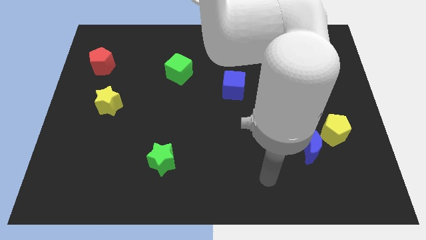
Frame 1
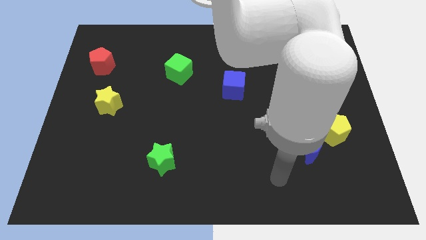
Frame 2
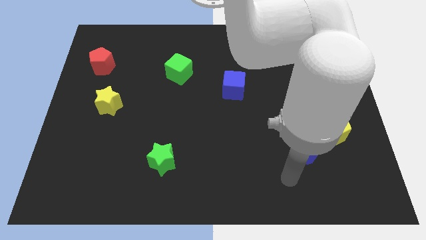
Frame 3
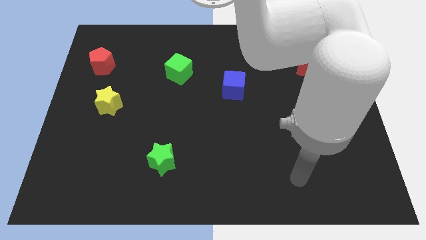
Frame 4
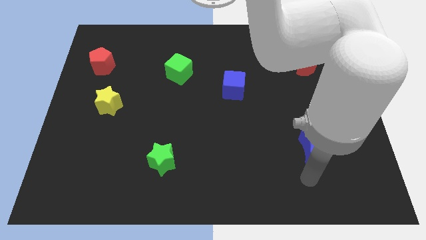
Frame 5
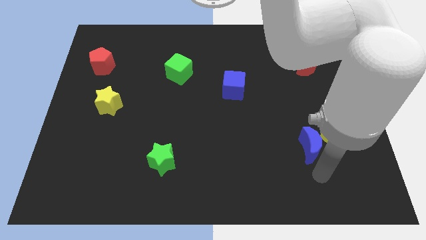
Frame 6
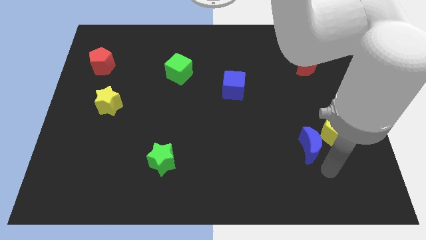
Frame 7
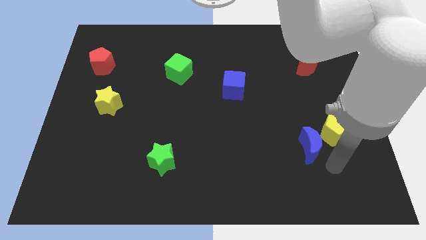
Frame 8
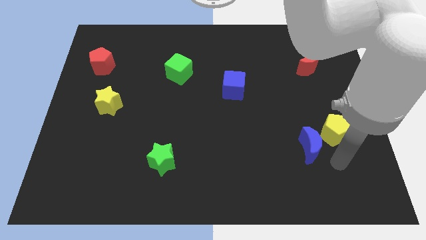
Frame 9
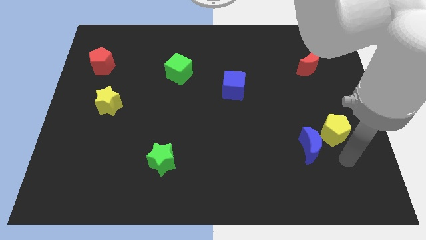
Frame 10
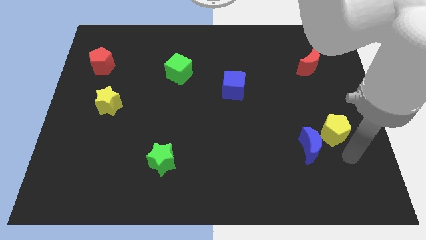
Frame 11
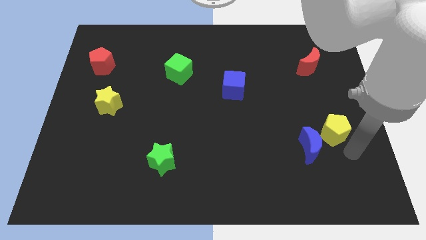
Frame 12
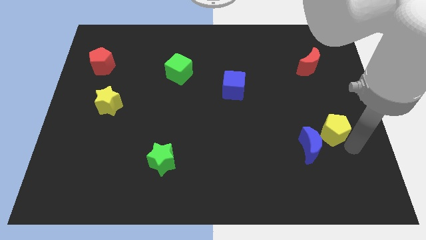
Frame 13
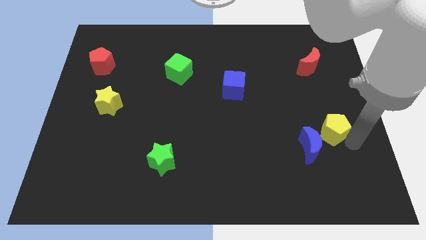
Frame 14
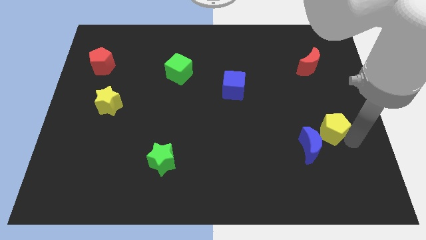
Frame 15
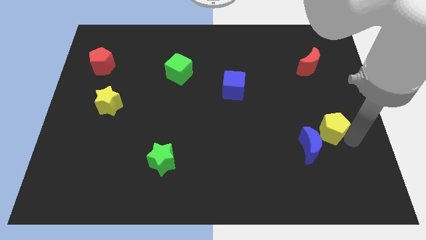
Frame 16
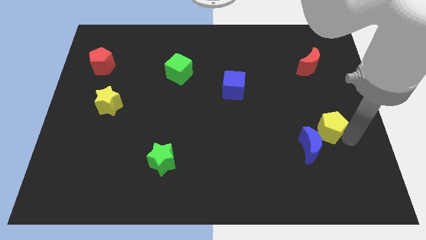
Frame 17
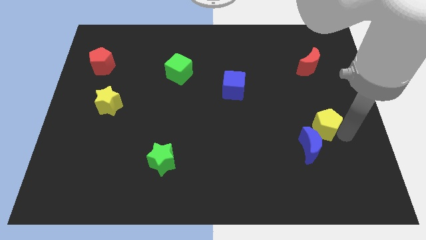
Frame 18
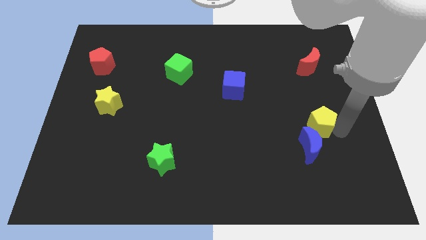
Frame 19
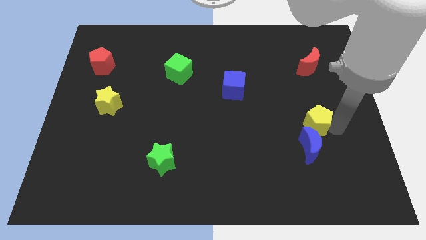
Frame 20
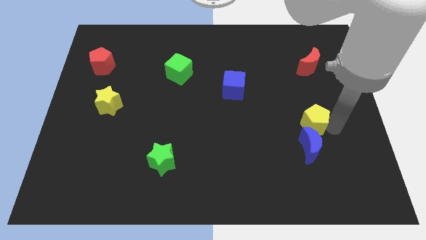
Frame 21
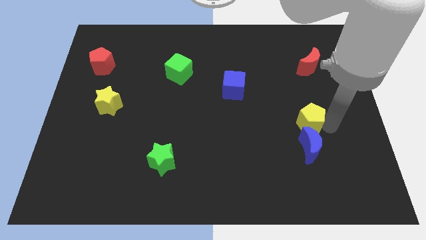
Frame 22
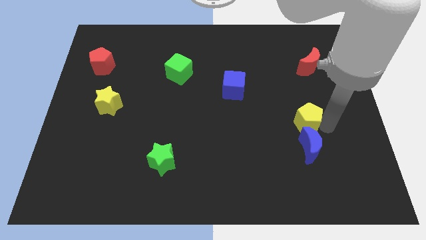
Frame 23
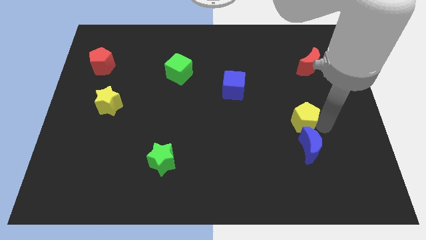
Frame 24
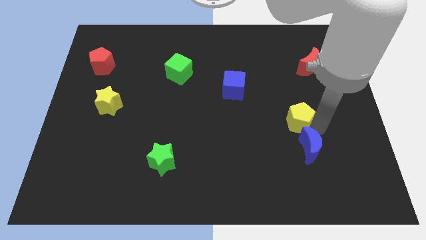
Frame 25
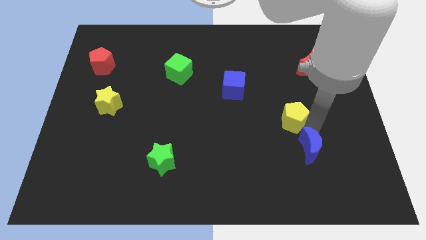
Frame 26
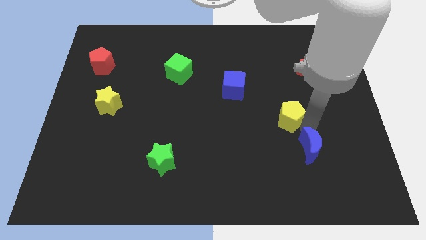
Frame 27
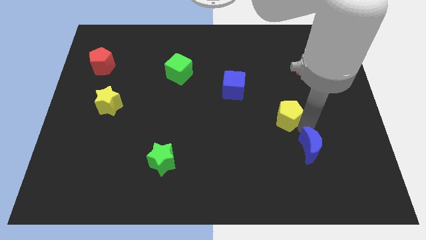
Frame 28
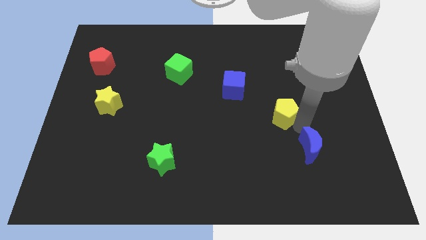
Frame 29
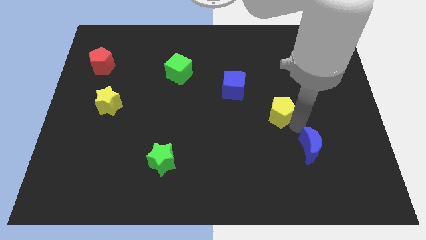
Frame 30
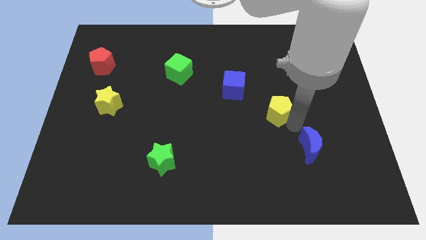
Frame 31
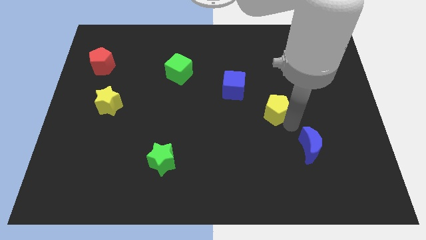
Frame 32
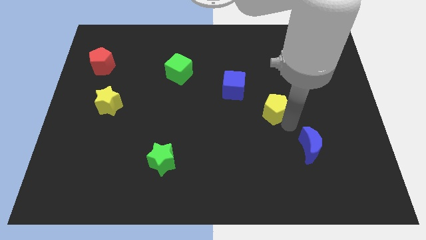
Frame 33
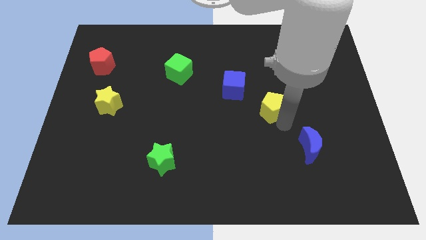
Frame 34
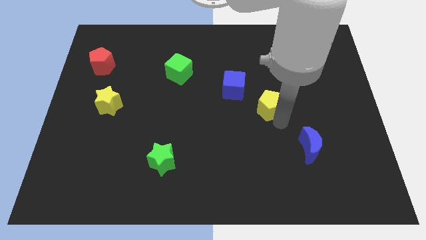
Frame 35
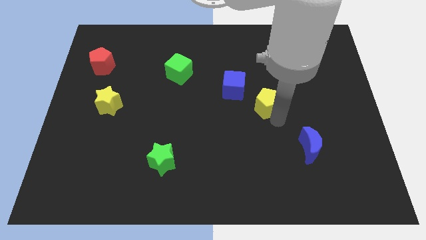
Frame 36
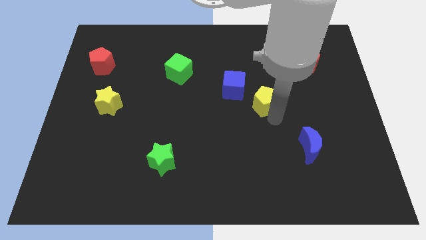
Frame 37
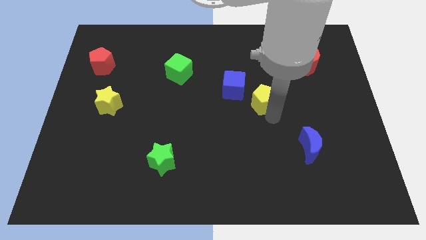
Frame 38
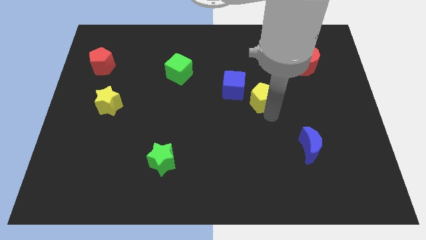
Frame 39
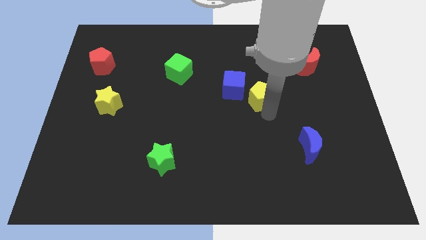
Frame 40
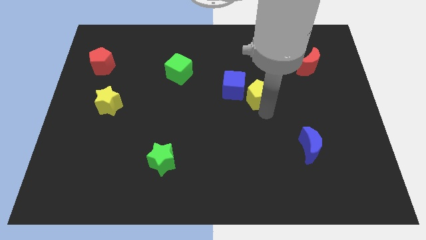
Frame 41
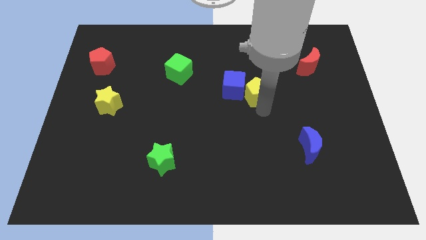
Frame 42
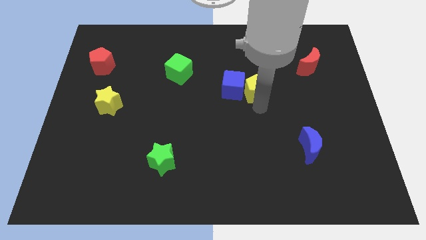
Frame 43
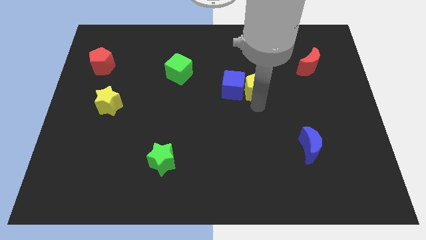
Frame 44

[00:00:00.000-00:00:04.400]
push the yellow pentagon next to the blue cube

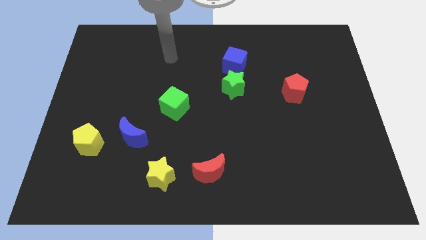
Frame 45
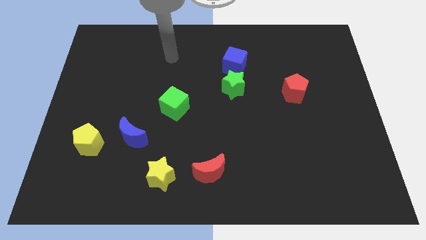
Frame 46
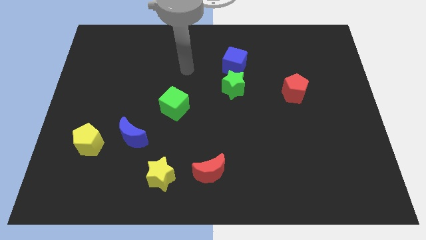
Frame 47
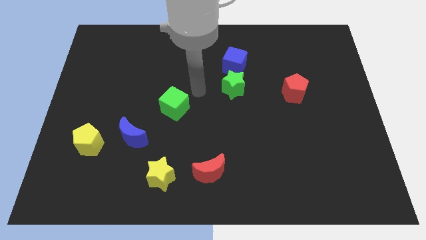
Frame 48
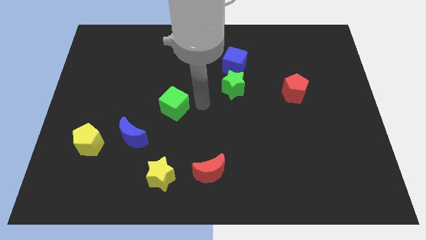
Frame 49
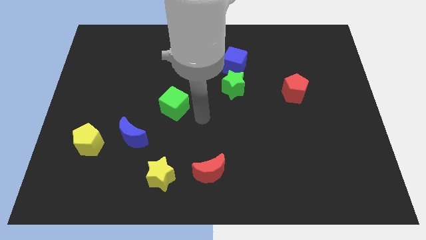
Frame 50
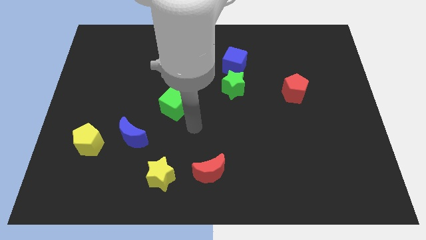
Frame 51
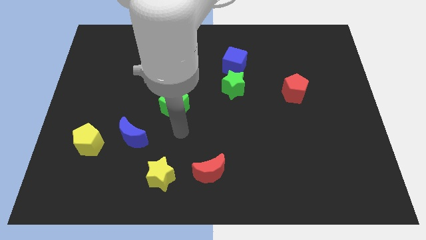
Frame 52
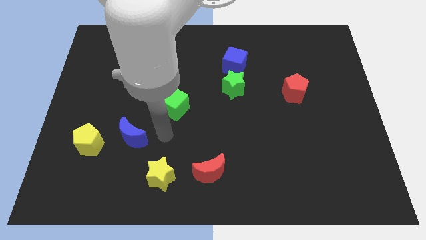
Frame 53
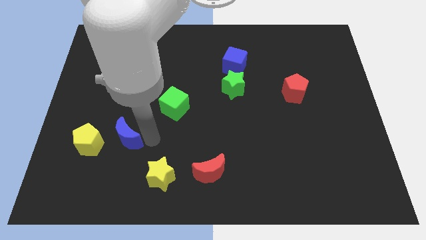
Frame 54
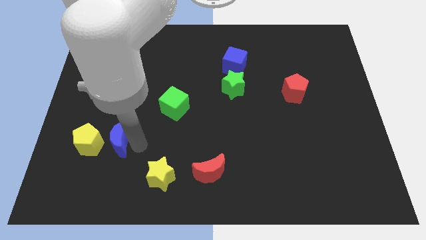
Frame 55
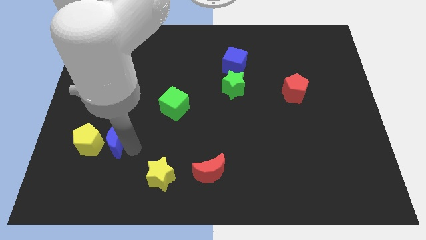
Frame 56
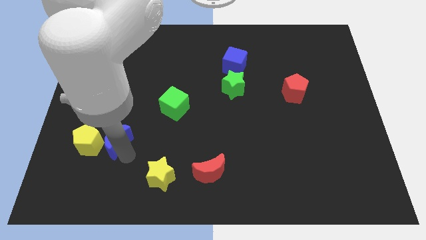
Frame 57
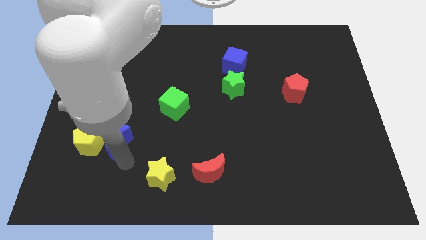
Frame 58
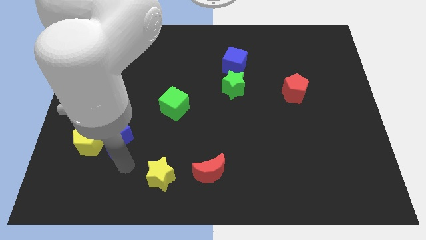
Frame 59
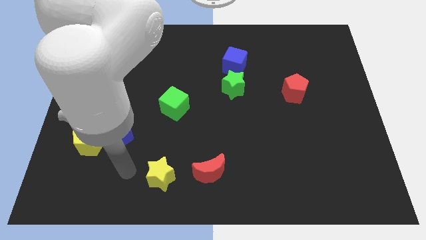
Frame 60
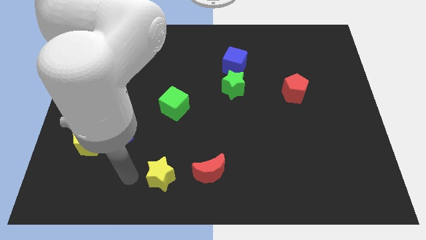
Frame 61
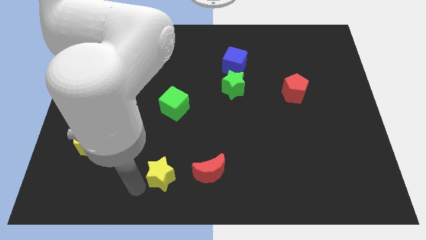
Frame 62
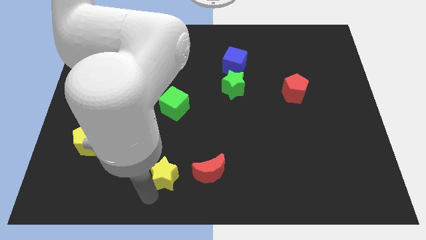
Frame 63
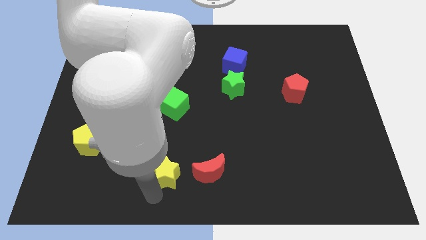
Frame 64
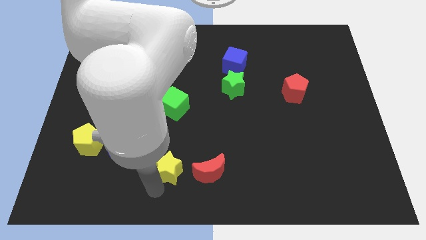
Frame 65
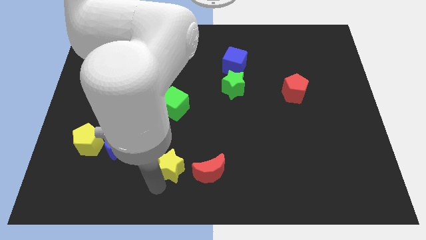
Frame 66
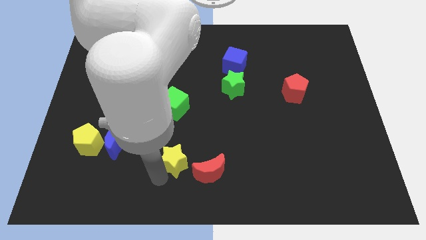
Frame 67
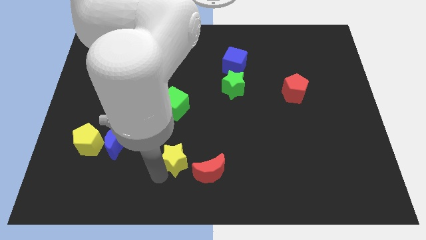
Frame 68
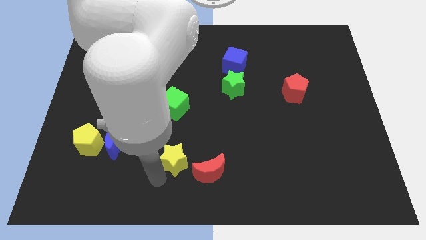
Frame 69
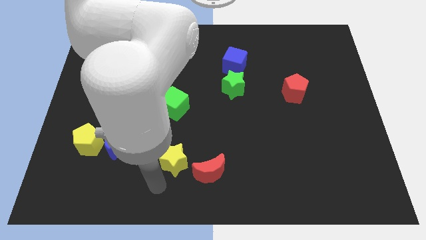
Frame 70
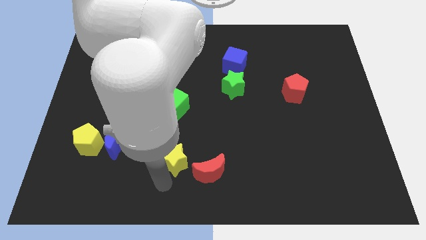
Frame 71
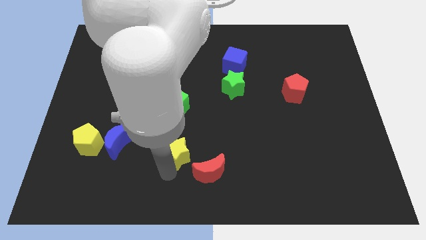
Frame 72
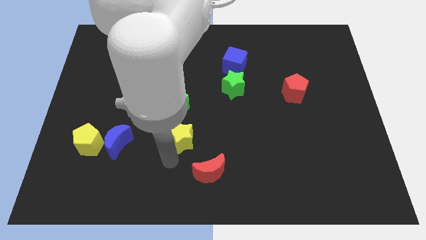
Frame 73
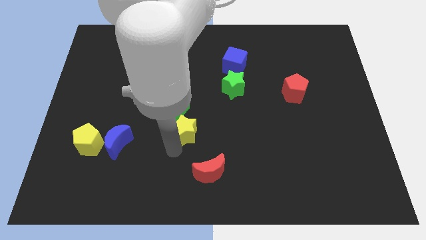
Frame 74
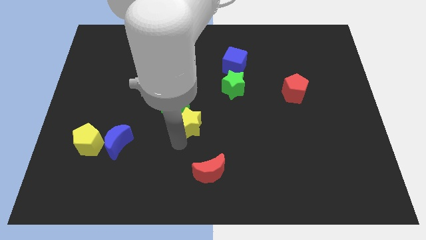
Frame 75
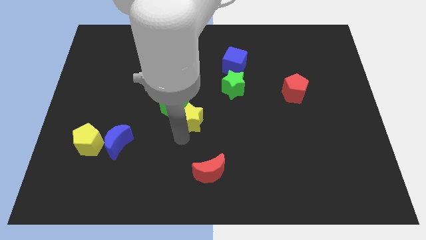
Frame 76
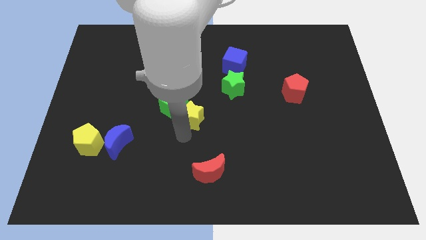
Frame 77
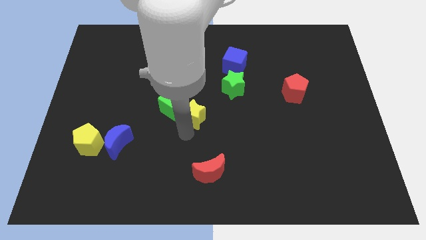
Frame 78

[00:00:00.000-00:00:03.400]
slide the yellow star to the green cube

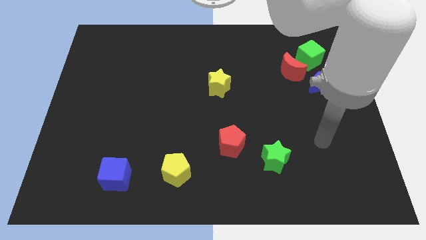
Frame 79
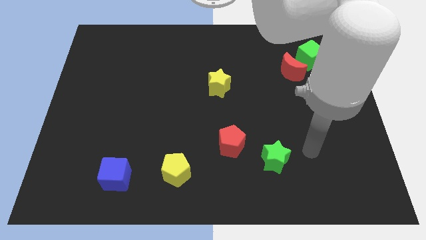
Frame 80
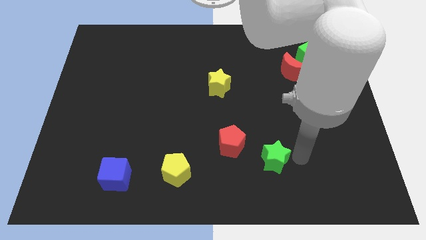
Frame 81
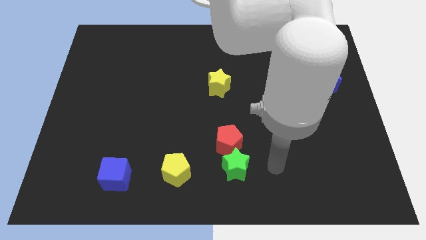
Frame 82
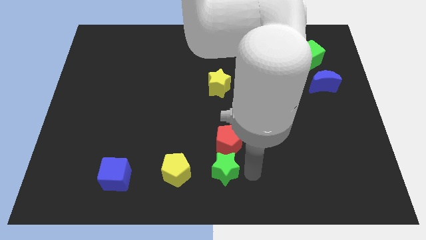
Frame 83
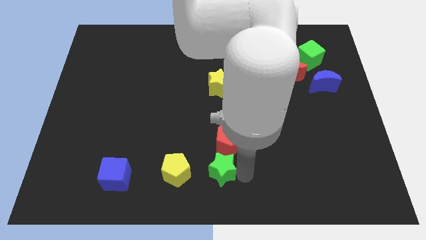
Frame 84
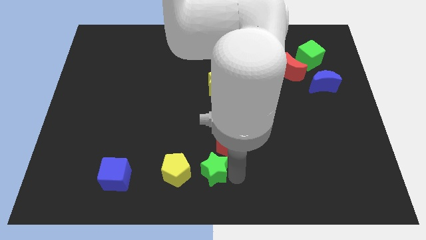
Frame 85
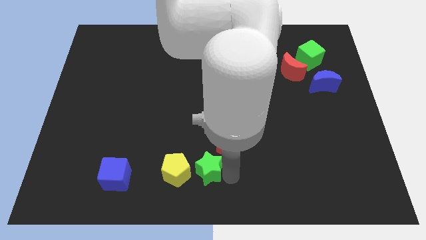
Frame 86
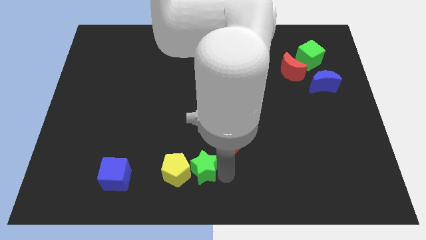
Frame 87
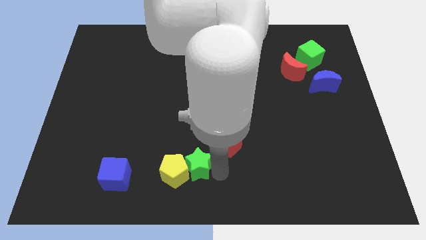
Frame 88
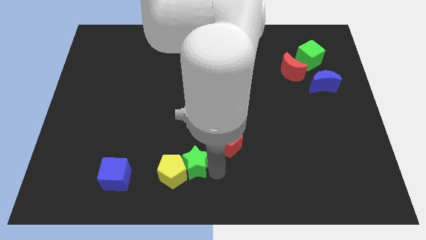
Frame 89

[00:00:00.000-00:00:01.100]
move the green star towards the yellow pentagon
